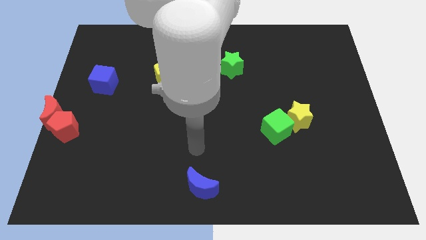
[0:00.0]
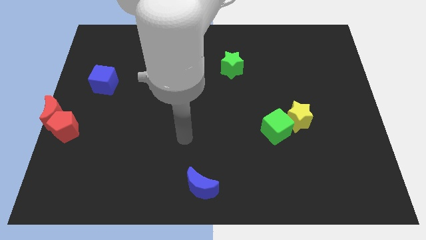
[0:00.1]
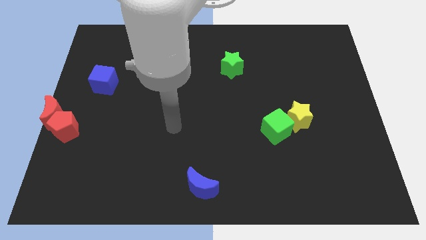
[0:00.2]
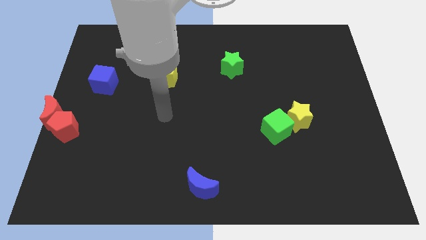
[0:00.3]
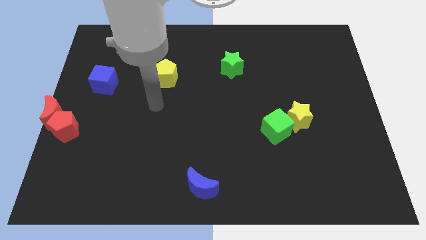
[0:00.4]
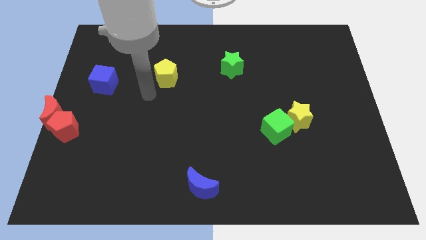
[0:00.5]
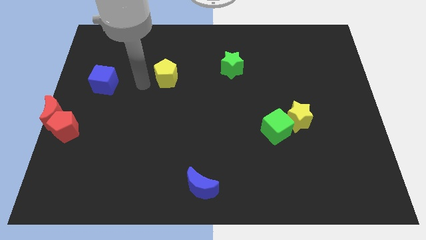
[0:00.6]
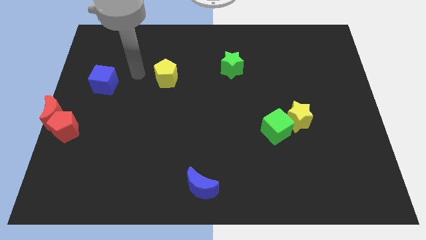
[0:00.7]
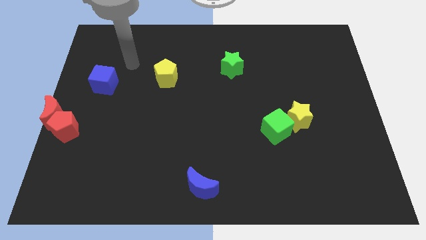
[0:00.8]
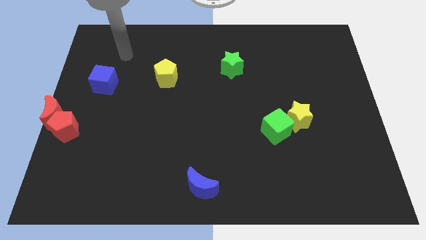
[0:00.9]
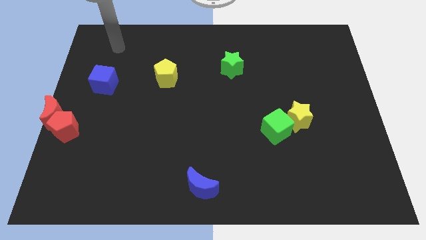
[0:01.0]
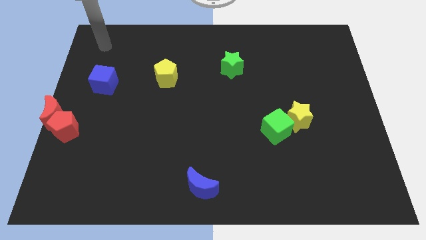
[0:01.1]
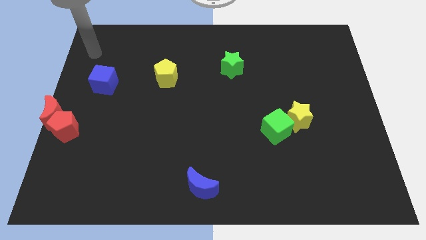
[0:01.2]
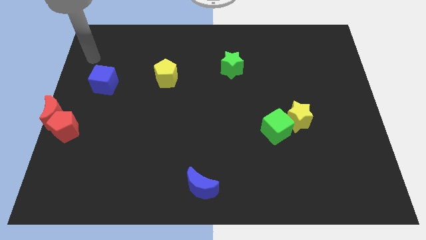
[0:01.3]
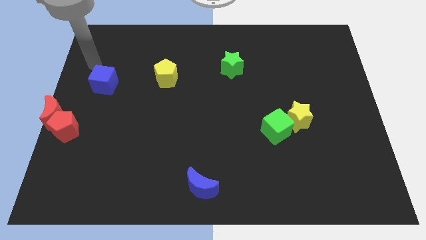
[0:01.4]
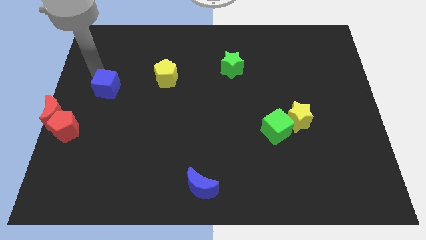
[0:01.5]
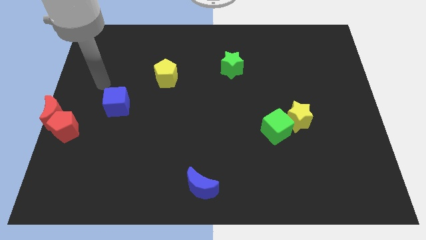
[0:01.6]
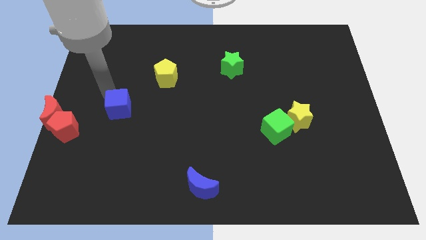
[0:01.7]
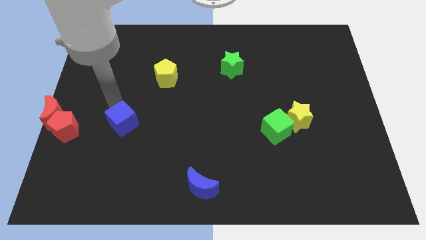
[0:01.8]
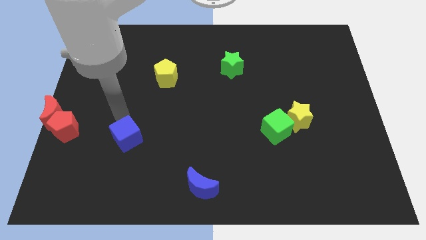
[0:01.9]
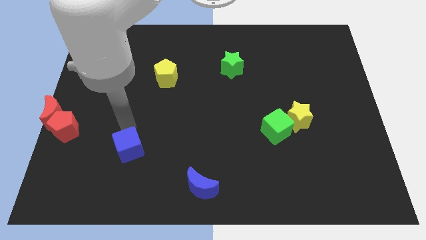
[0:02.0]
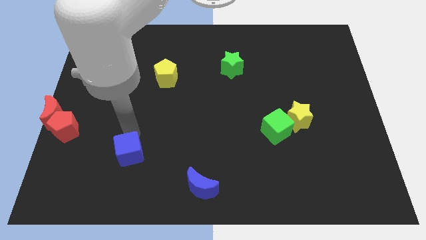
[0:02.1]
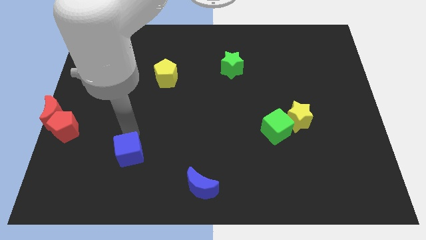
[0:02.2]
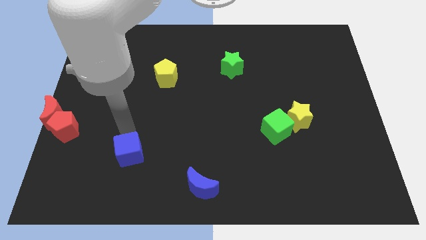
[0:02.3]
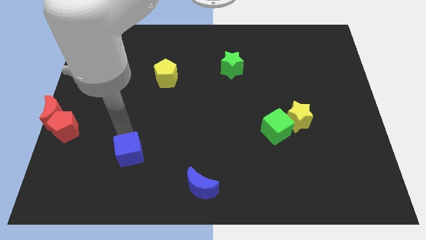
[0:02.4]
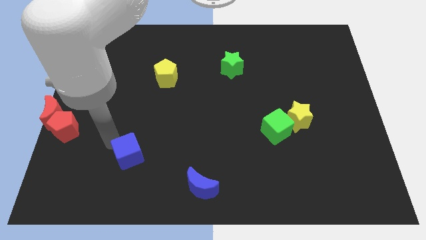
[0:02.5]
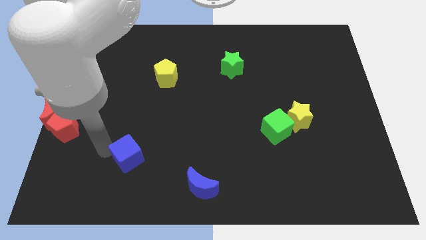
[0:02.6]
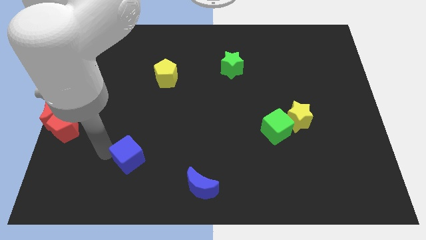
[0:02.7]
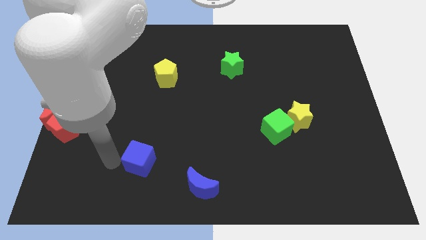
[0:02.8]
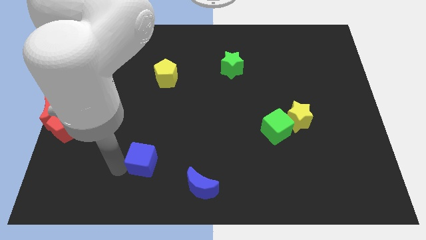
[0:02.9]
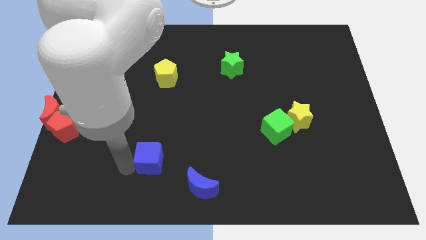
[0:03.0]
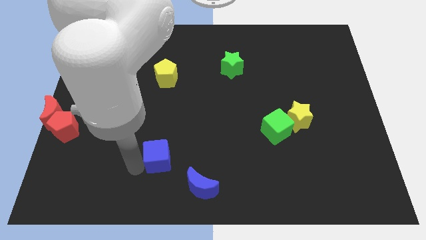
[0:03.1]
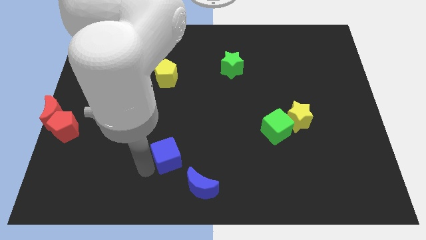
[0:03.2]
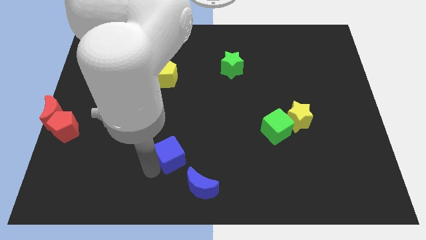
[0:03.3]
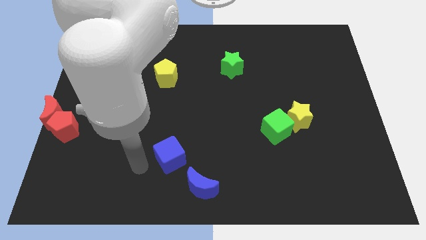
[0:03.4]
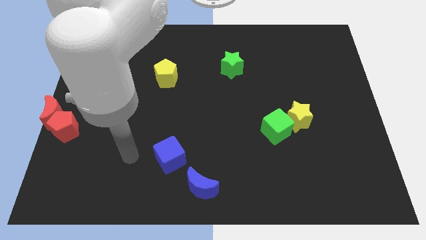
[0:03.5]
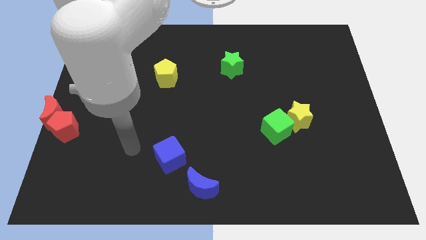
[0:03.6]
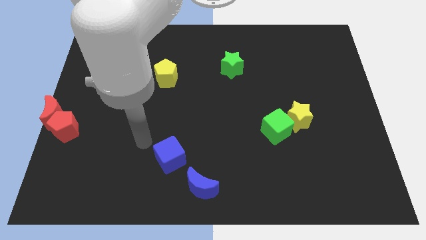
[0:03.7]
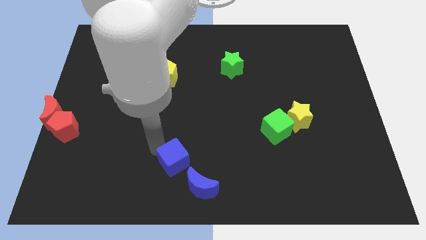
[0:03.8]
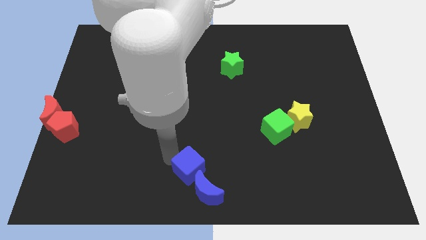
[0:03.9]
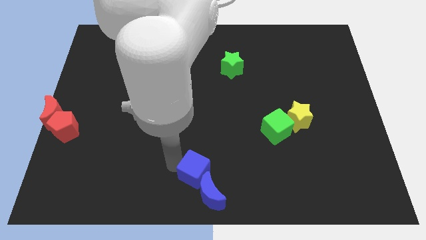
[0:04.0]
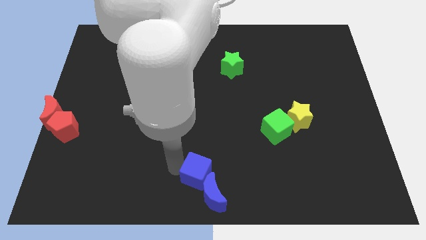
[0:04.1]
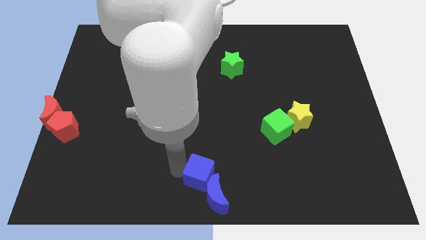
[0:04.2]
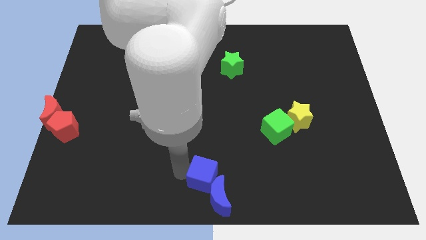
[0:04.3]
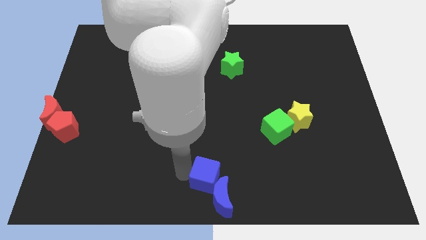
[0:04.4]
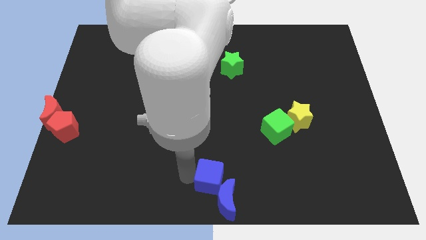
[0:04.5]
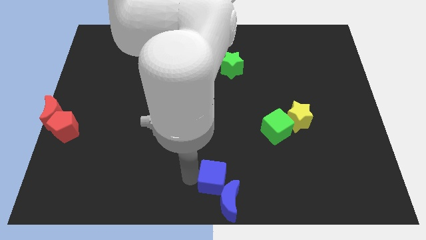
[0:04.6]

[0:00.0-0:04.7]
push the blue cube into the blue moon

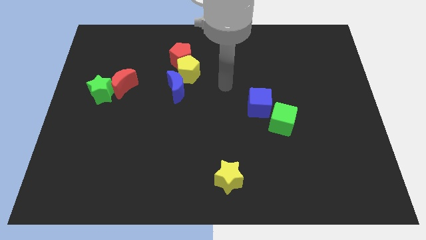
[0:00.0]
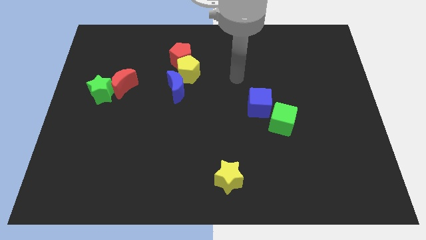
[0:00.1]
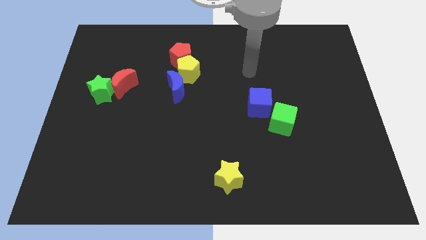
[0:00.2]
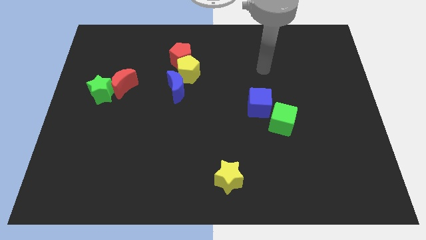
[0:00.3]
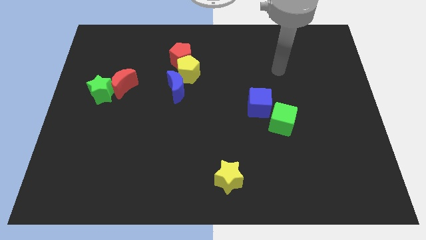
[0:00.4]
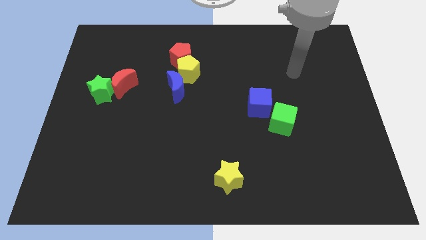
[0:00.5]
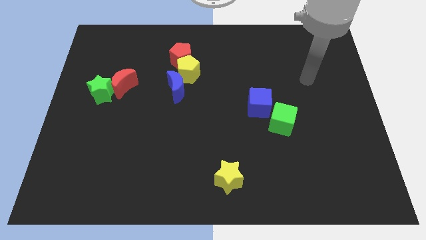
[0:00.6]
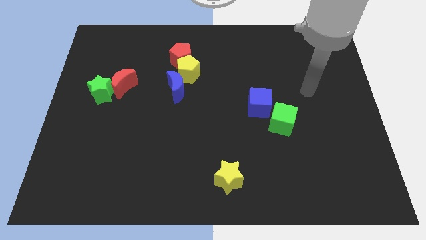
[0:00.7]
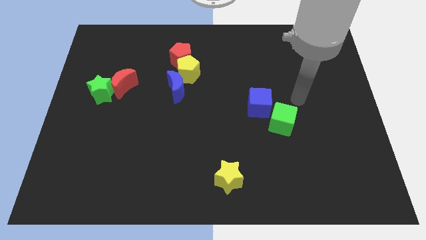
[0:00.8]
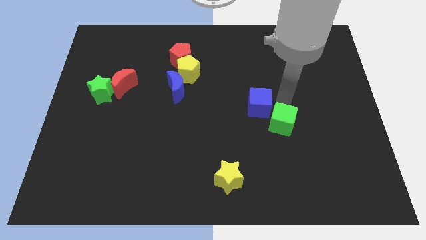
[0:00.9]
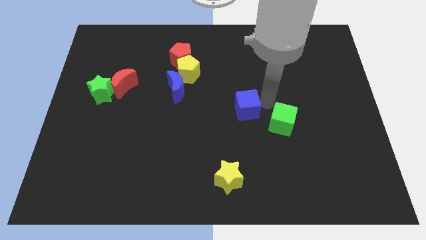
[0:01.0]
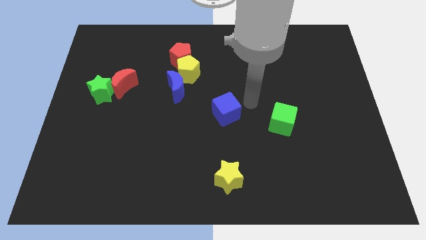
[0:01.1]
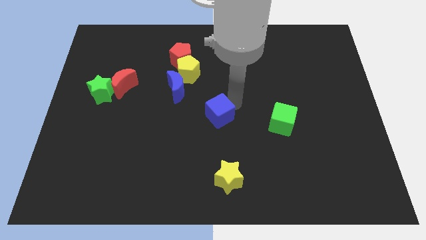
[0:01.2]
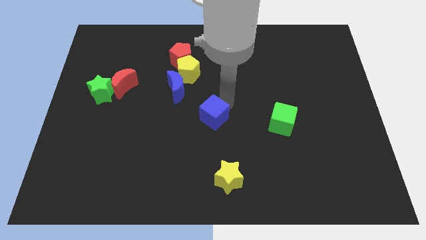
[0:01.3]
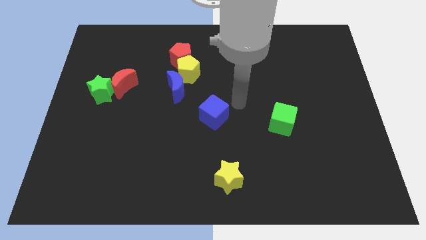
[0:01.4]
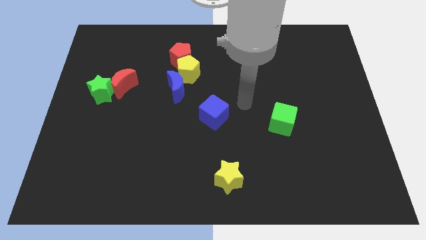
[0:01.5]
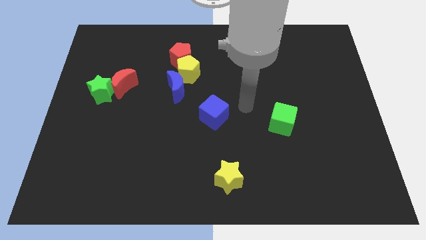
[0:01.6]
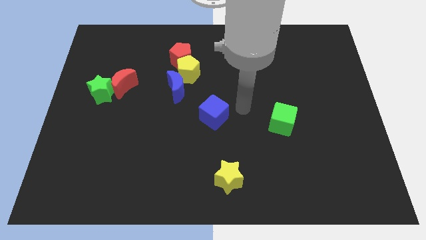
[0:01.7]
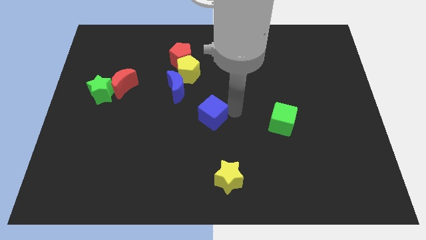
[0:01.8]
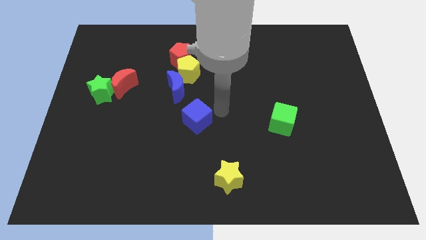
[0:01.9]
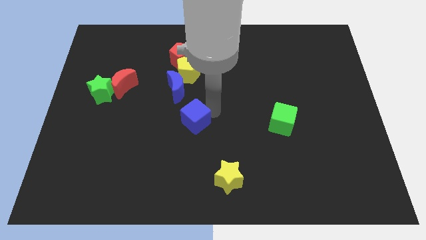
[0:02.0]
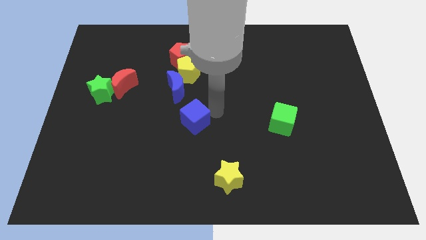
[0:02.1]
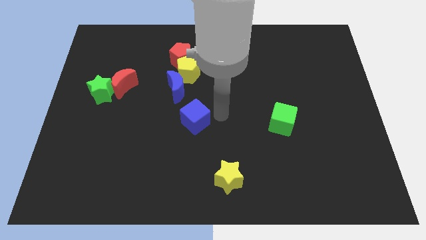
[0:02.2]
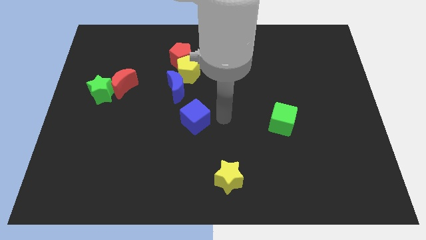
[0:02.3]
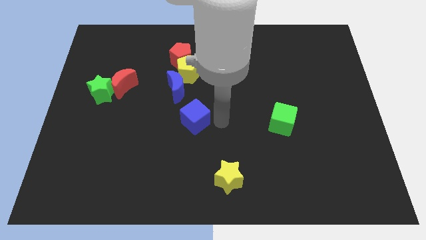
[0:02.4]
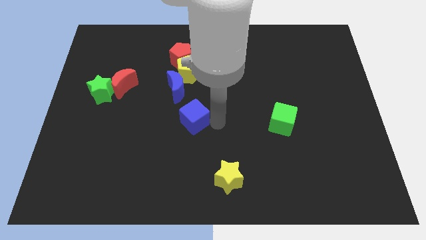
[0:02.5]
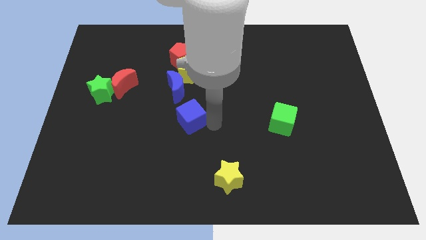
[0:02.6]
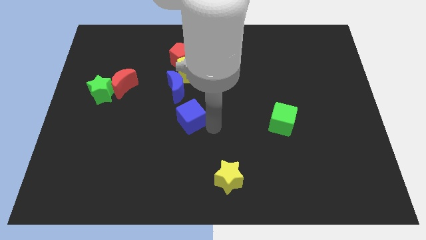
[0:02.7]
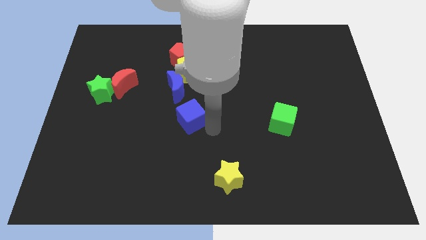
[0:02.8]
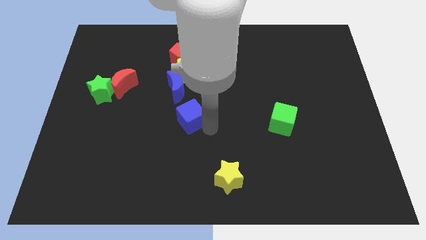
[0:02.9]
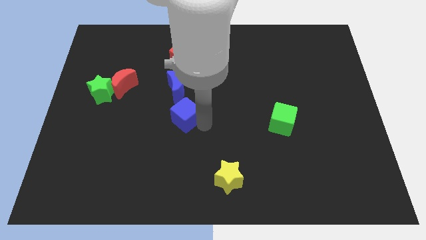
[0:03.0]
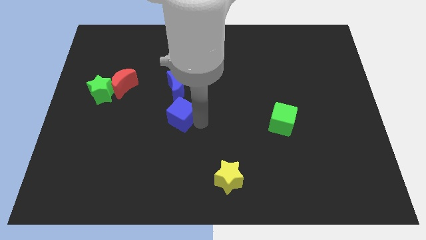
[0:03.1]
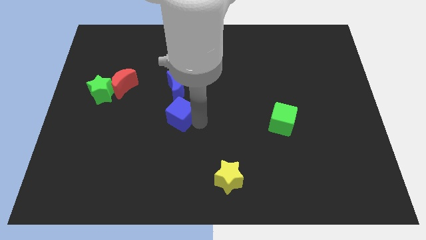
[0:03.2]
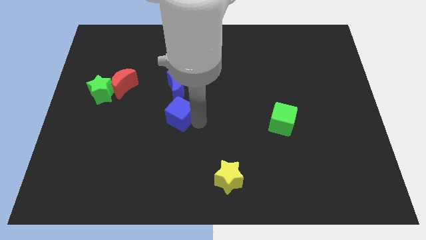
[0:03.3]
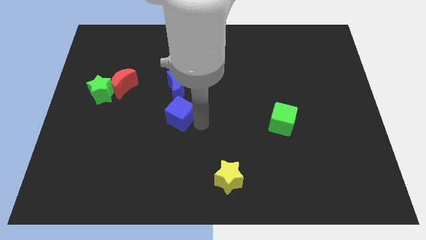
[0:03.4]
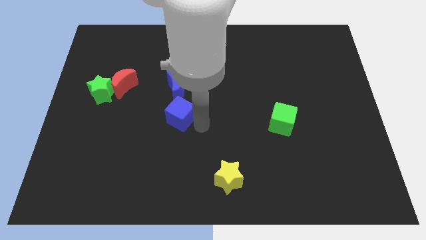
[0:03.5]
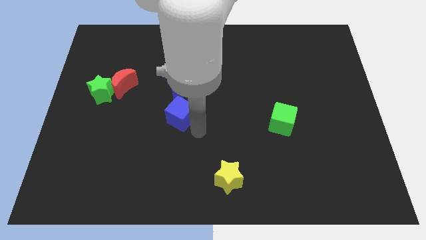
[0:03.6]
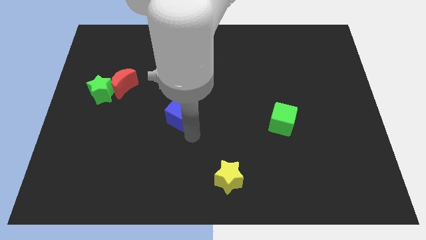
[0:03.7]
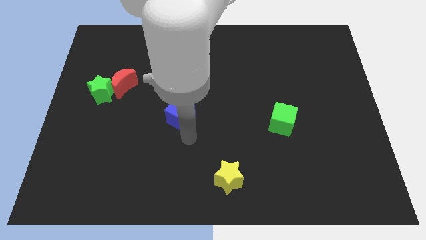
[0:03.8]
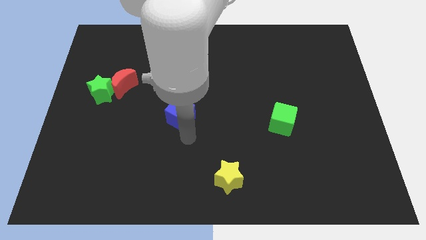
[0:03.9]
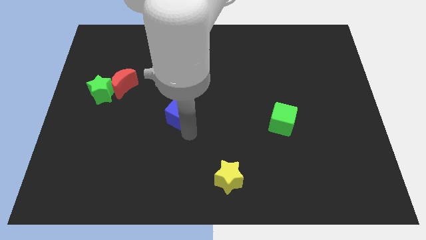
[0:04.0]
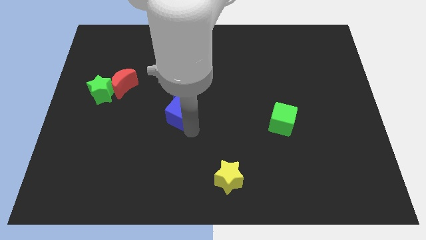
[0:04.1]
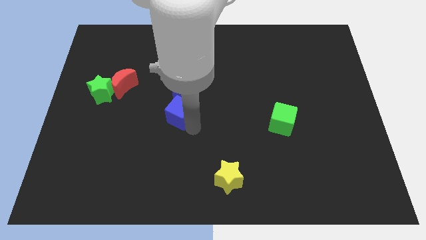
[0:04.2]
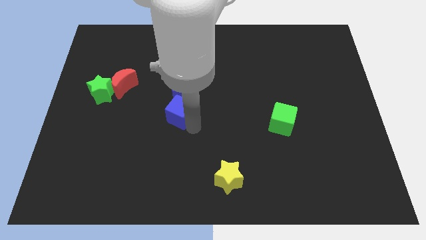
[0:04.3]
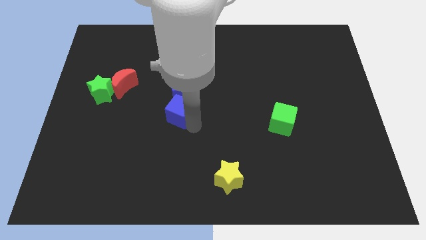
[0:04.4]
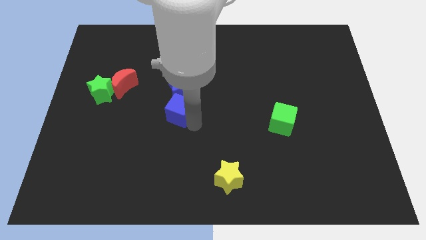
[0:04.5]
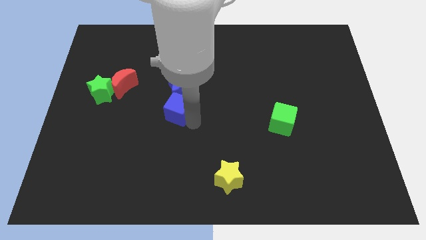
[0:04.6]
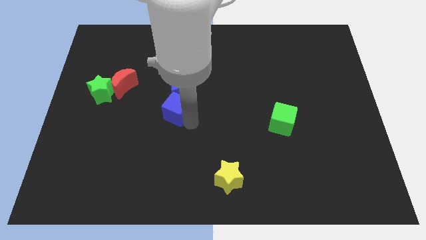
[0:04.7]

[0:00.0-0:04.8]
slide the blue cube into the bottom side of the blue crescent
